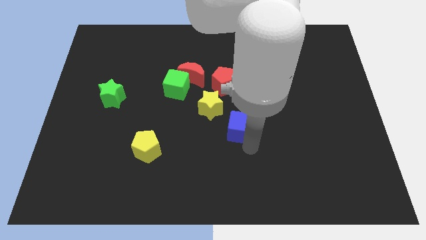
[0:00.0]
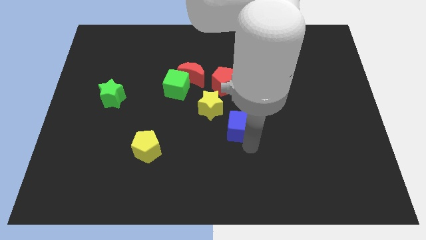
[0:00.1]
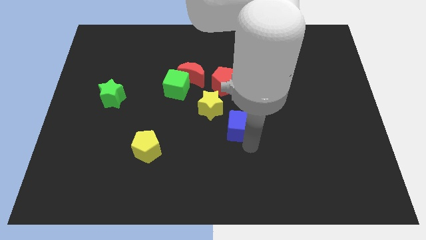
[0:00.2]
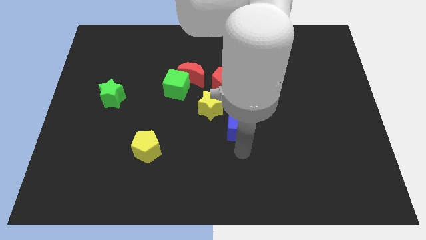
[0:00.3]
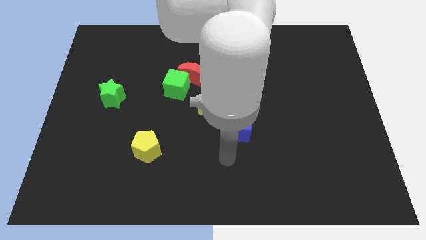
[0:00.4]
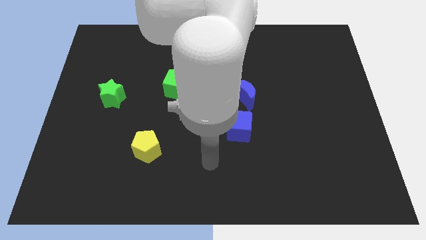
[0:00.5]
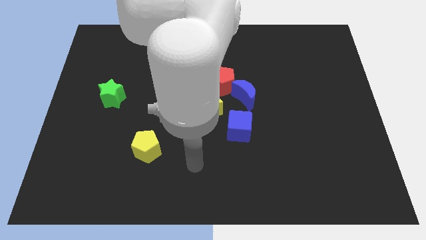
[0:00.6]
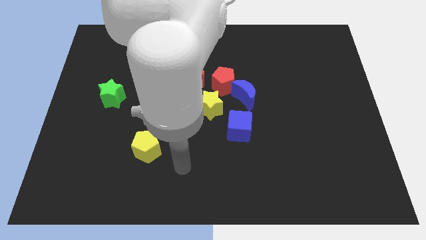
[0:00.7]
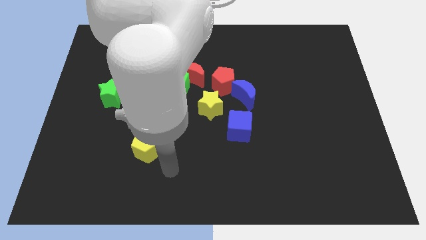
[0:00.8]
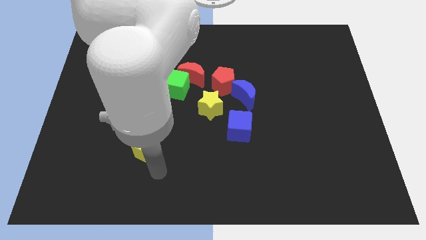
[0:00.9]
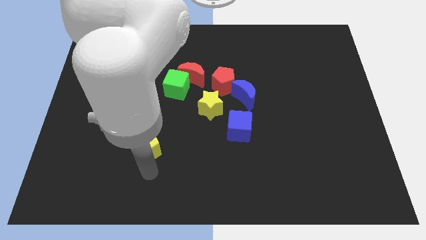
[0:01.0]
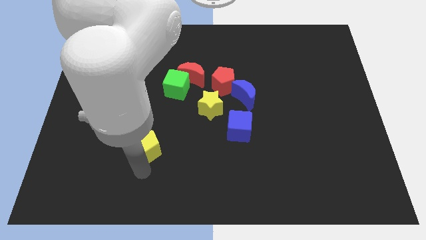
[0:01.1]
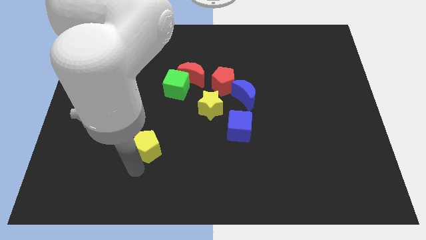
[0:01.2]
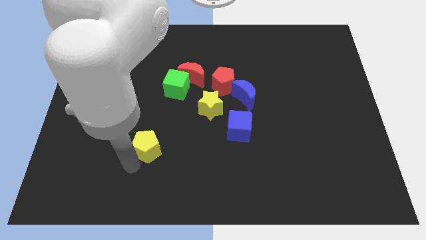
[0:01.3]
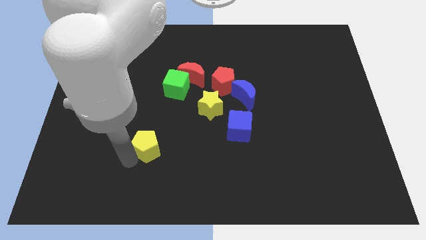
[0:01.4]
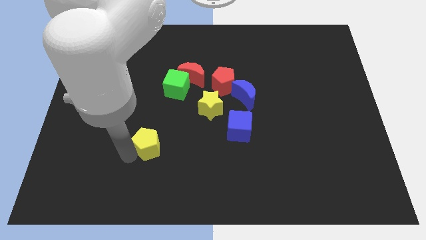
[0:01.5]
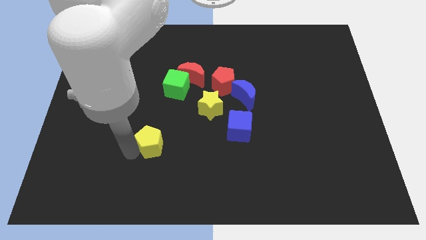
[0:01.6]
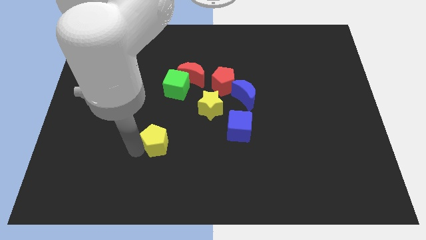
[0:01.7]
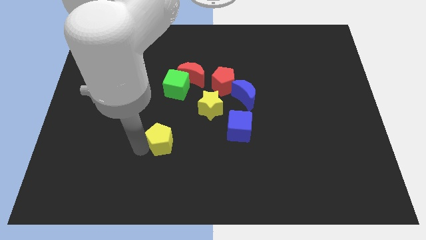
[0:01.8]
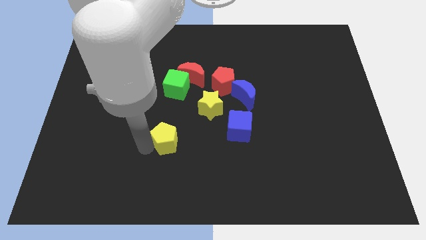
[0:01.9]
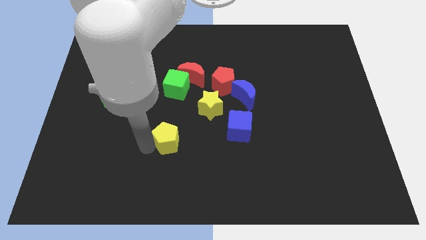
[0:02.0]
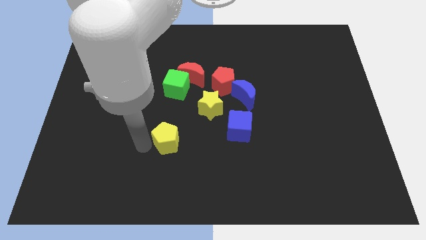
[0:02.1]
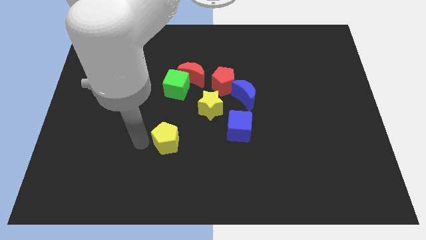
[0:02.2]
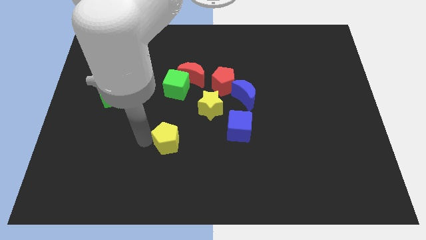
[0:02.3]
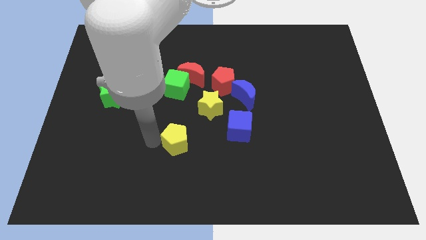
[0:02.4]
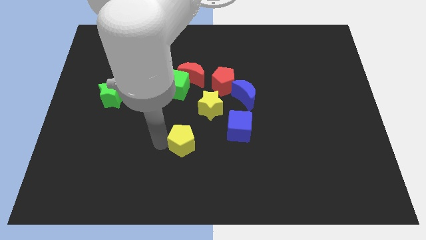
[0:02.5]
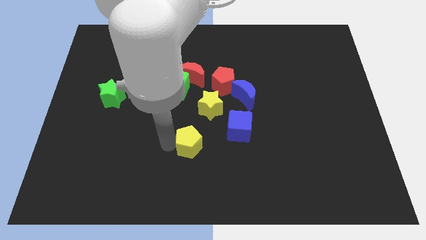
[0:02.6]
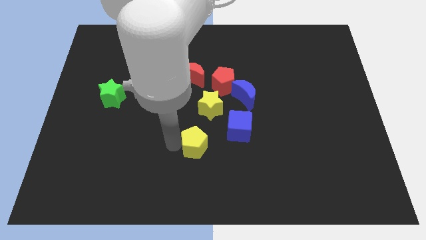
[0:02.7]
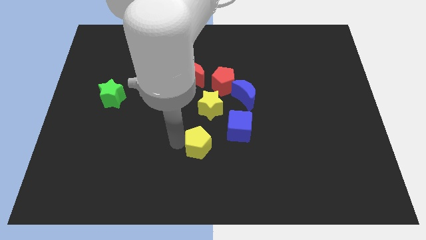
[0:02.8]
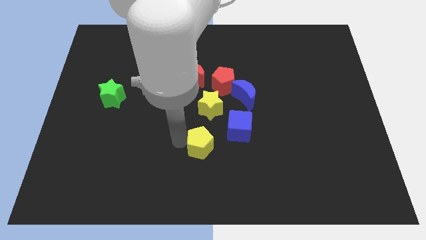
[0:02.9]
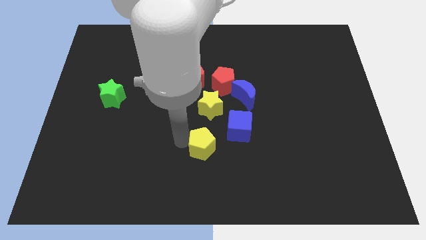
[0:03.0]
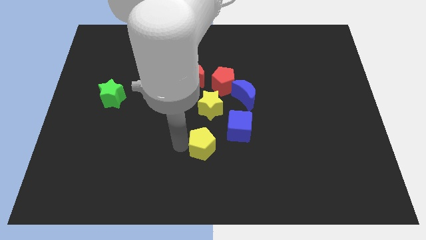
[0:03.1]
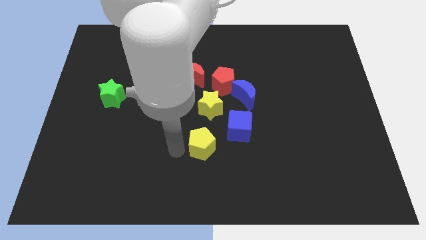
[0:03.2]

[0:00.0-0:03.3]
place the yellow pentagon below the yellow star

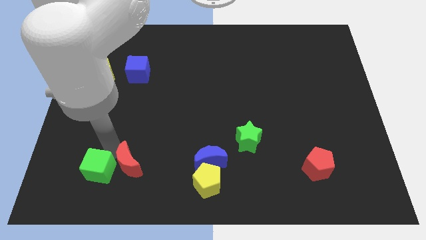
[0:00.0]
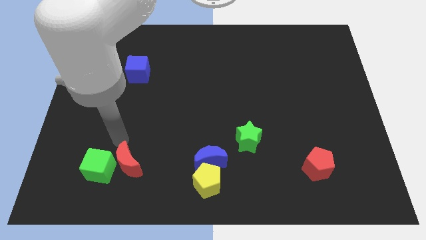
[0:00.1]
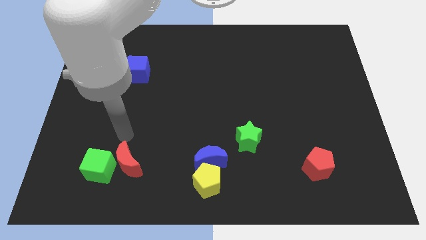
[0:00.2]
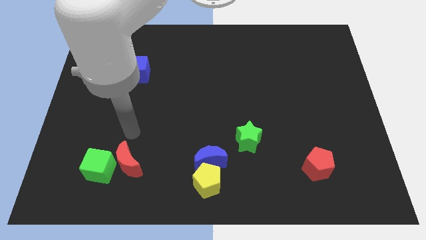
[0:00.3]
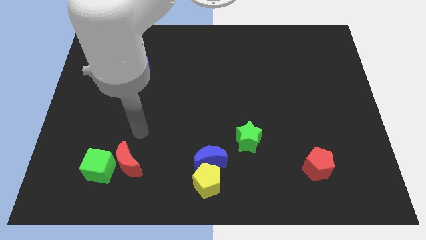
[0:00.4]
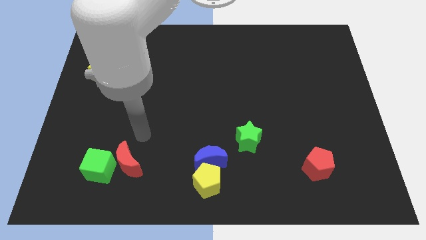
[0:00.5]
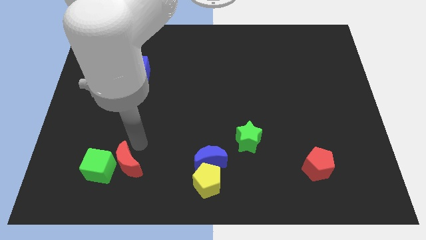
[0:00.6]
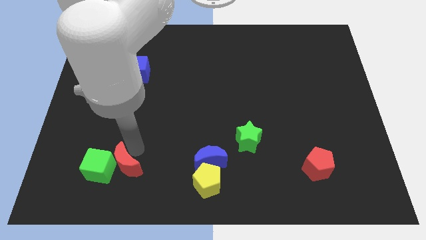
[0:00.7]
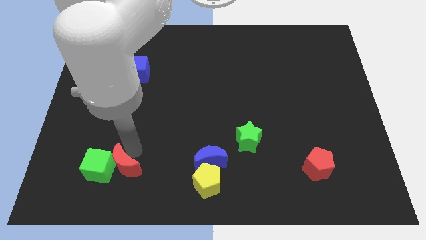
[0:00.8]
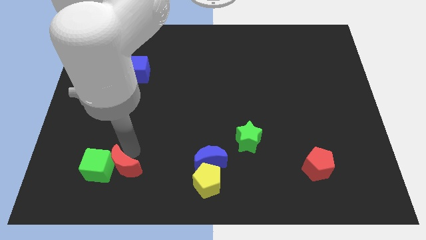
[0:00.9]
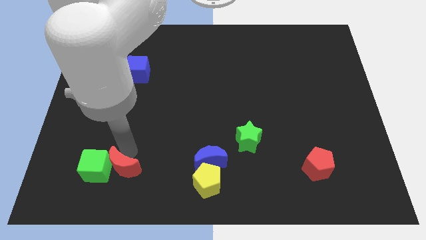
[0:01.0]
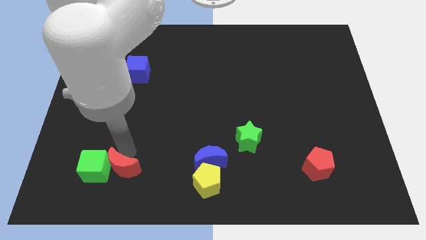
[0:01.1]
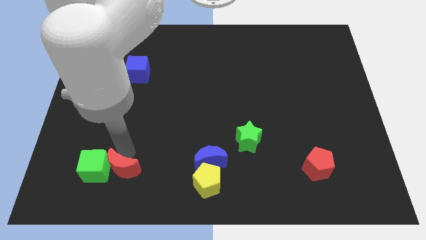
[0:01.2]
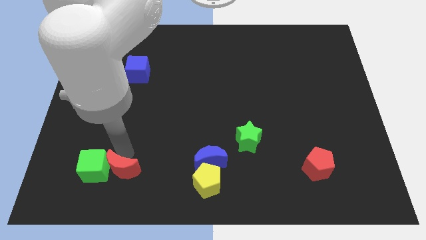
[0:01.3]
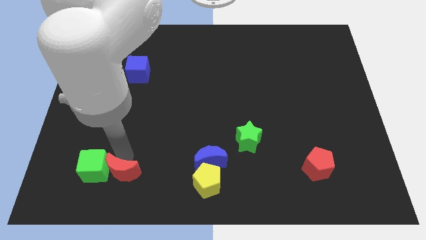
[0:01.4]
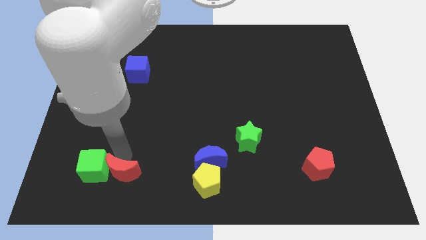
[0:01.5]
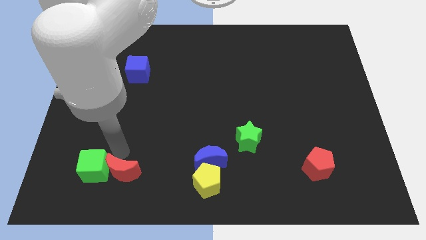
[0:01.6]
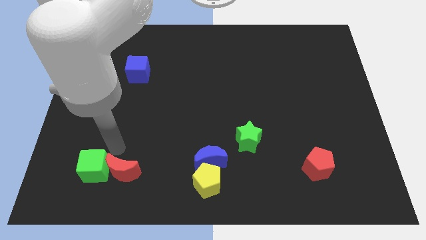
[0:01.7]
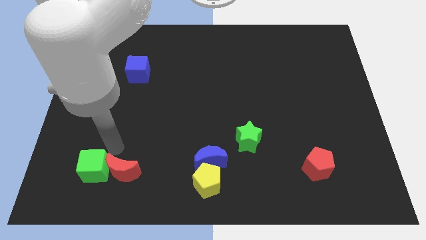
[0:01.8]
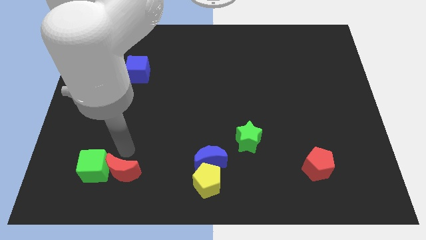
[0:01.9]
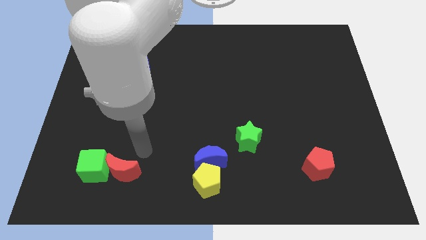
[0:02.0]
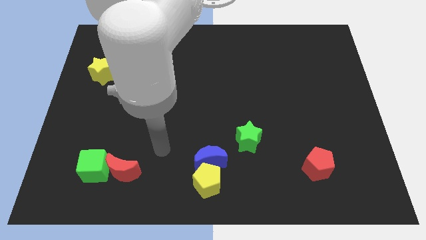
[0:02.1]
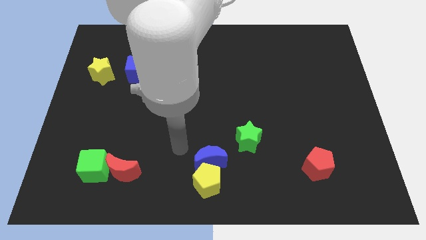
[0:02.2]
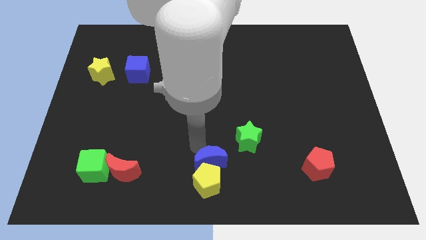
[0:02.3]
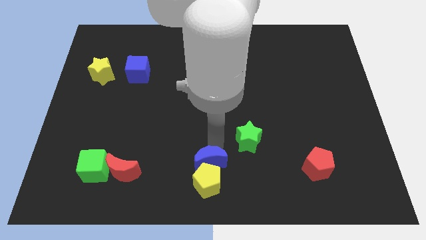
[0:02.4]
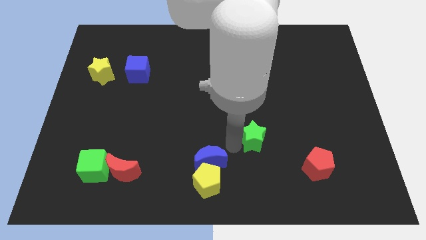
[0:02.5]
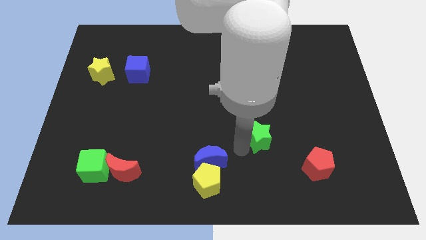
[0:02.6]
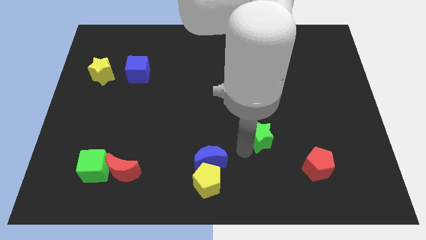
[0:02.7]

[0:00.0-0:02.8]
move slightly the red crescent to the green cube

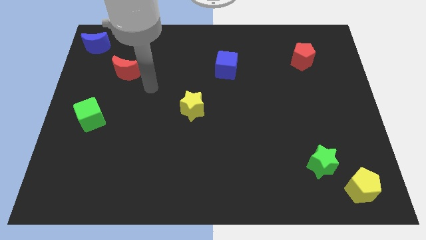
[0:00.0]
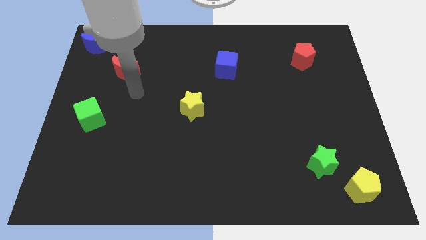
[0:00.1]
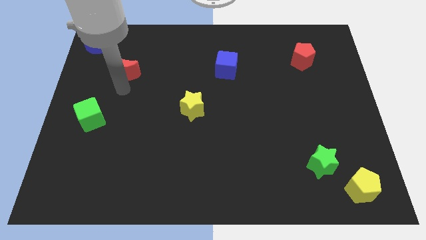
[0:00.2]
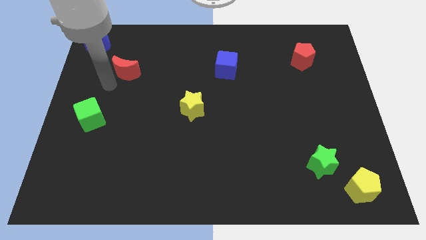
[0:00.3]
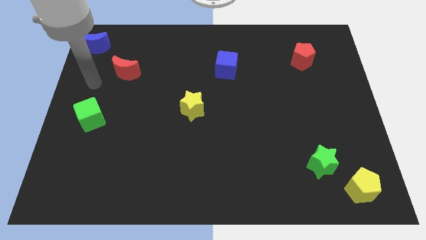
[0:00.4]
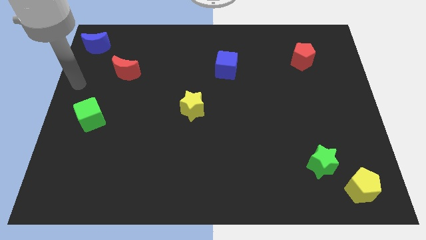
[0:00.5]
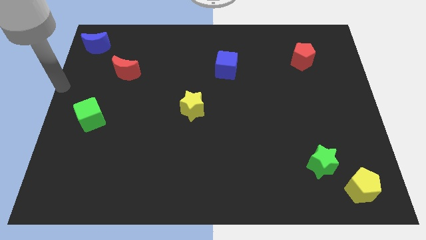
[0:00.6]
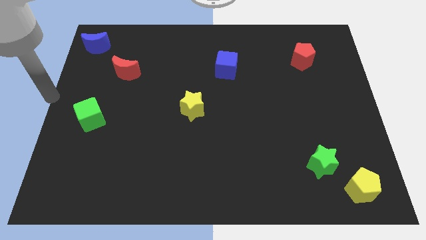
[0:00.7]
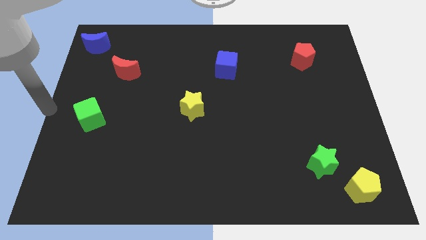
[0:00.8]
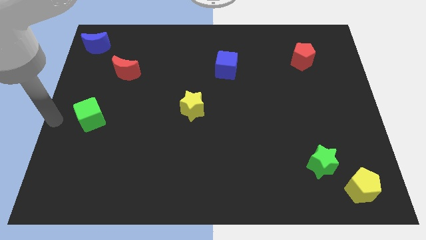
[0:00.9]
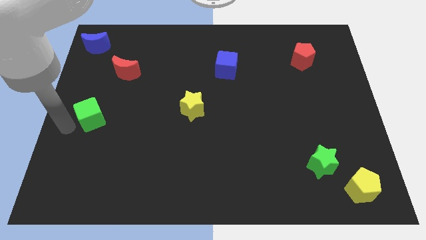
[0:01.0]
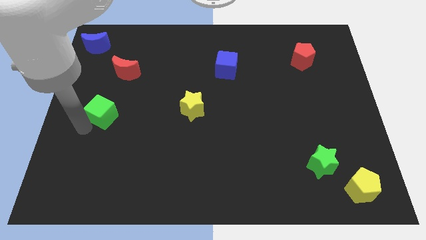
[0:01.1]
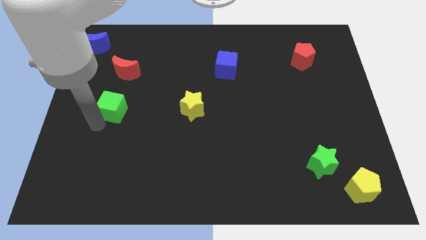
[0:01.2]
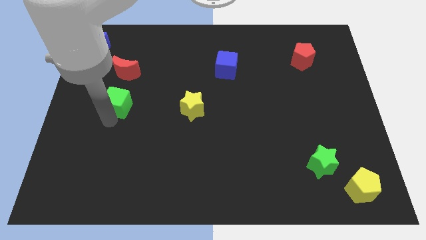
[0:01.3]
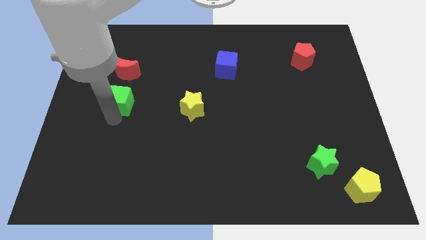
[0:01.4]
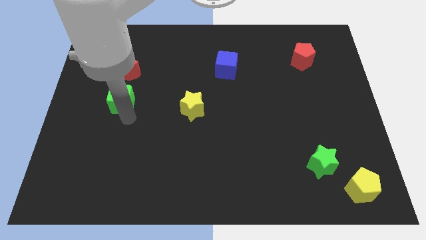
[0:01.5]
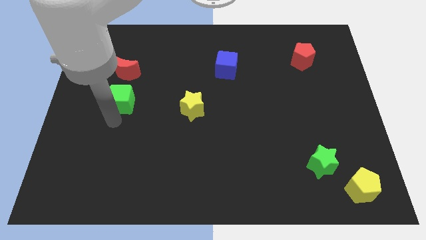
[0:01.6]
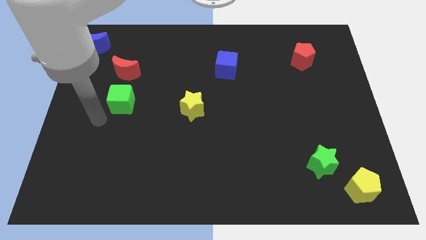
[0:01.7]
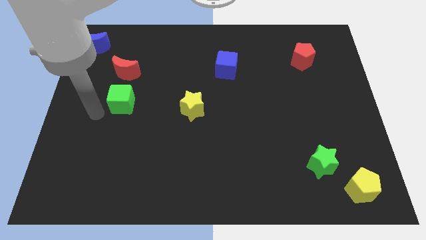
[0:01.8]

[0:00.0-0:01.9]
place the green cube underneath the red crescent

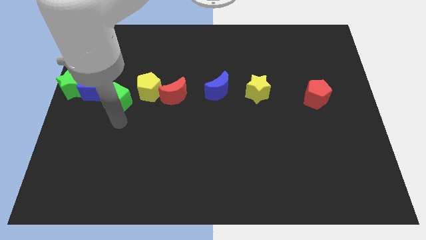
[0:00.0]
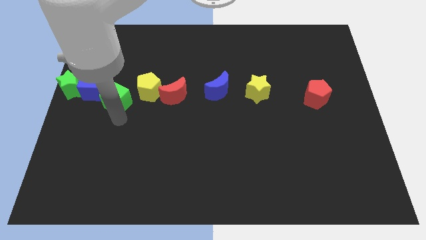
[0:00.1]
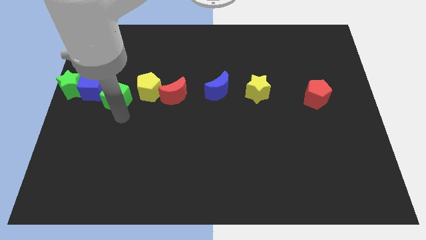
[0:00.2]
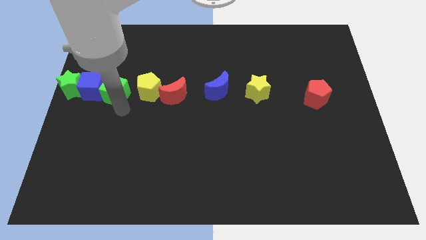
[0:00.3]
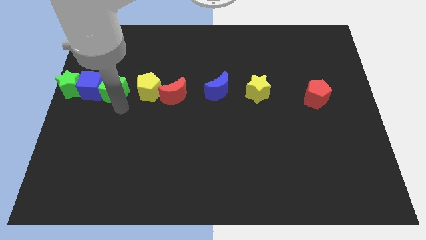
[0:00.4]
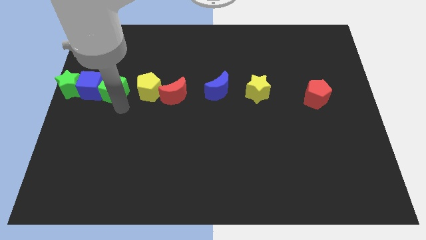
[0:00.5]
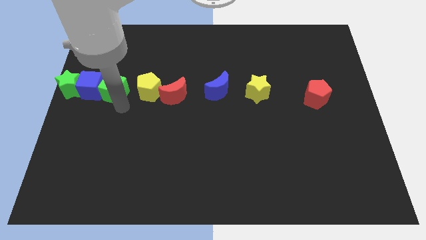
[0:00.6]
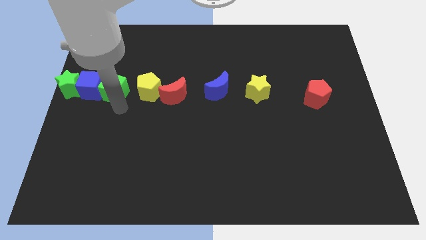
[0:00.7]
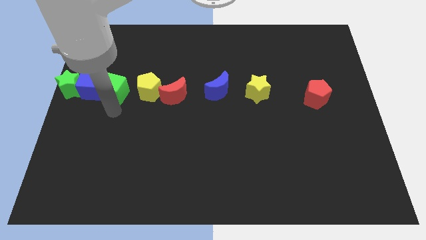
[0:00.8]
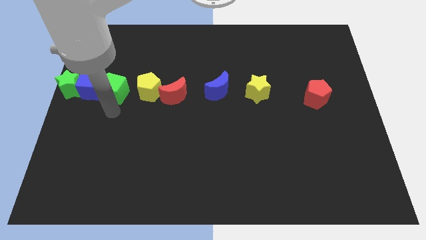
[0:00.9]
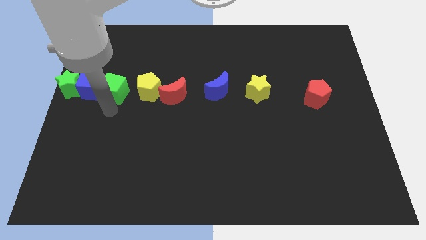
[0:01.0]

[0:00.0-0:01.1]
move the green cube into the blue cube
